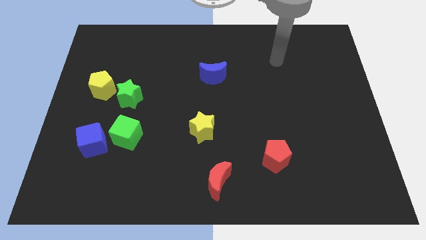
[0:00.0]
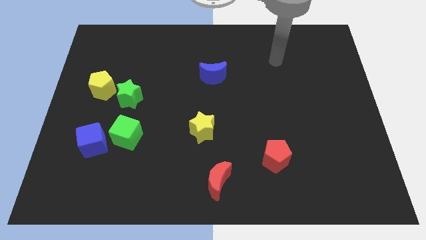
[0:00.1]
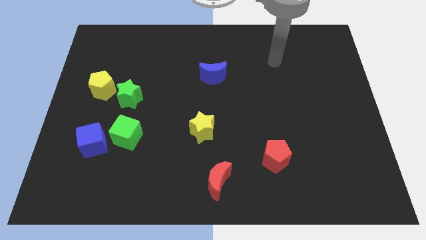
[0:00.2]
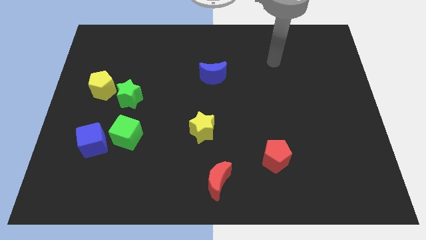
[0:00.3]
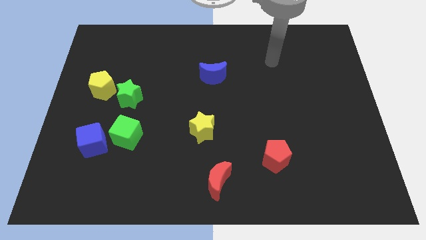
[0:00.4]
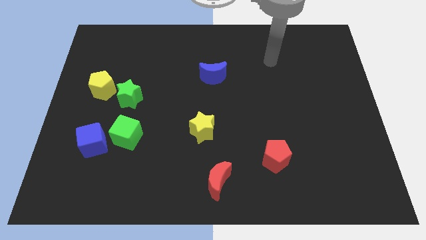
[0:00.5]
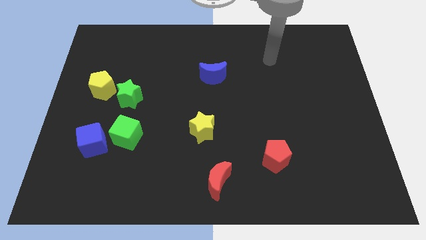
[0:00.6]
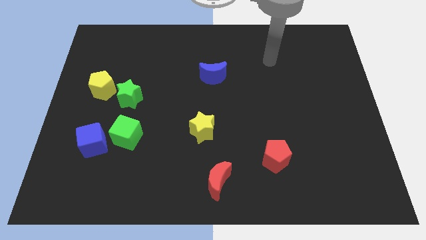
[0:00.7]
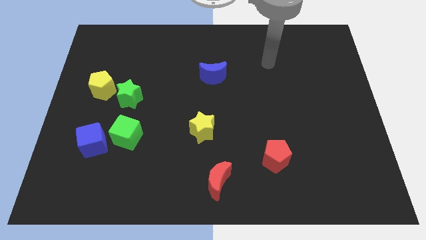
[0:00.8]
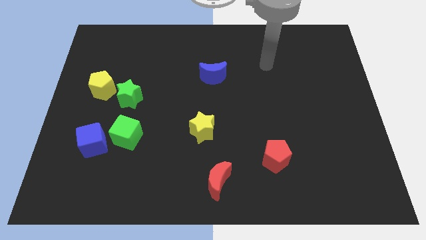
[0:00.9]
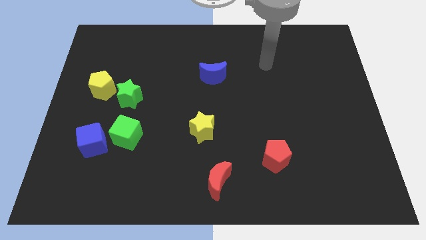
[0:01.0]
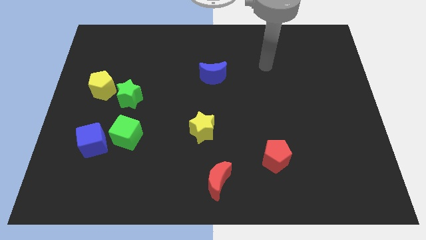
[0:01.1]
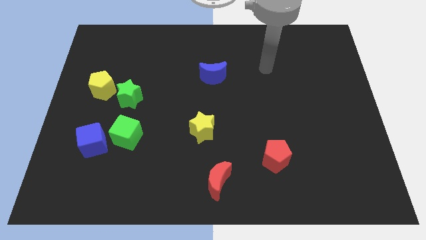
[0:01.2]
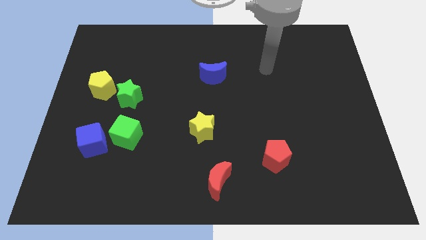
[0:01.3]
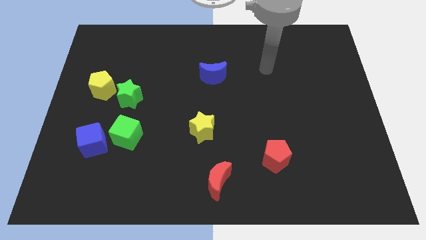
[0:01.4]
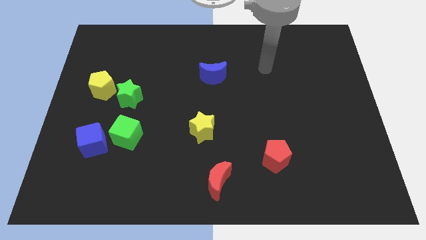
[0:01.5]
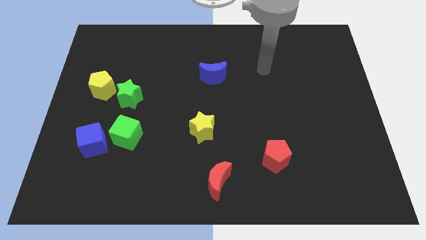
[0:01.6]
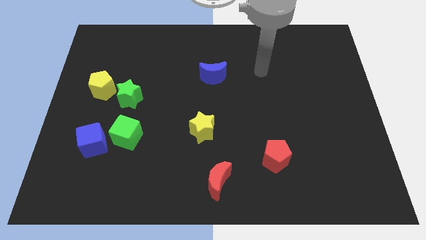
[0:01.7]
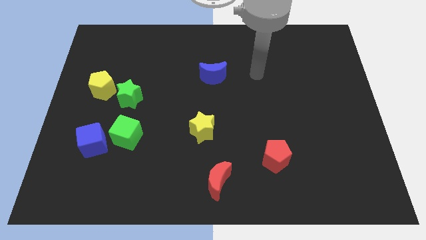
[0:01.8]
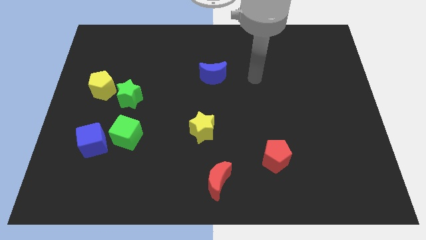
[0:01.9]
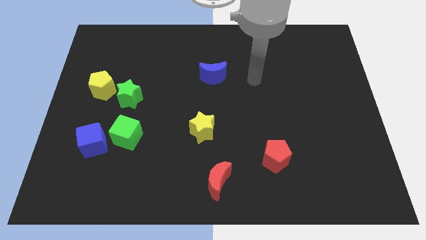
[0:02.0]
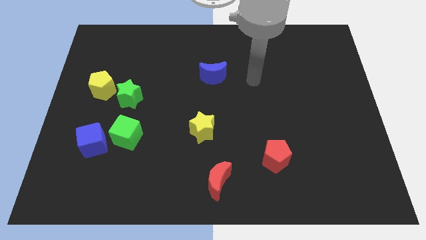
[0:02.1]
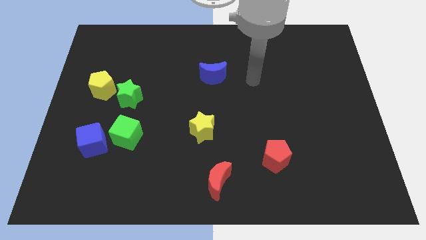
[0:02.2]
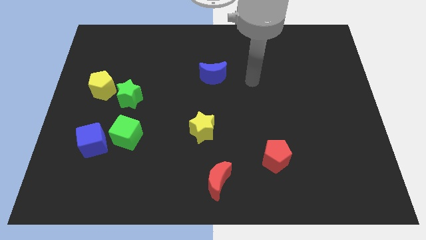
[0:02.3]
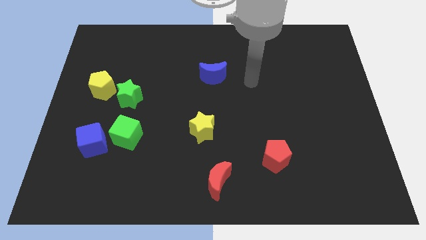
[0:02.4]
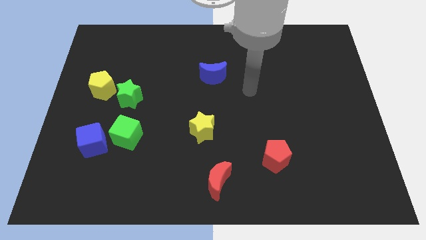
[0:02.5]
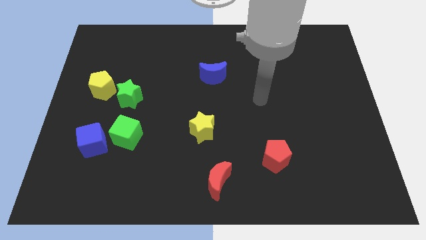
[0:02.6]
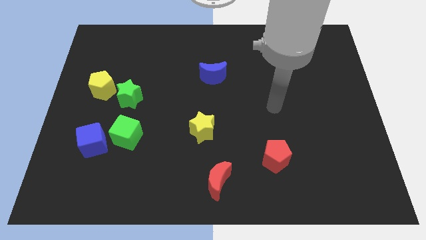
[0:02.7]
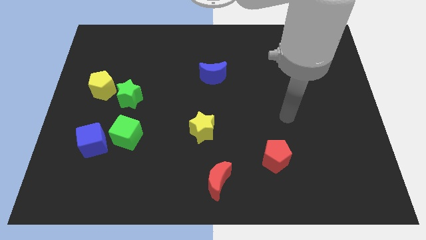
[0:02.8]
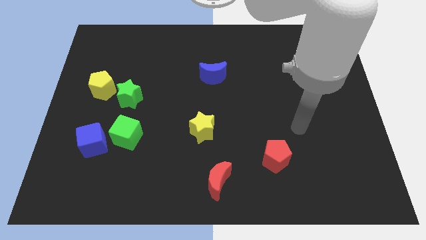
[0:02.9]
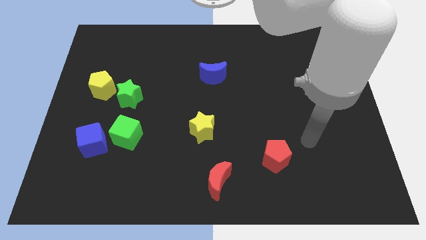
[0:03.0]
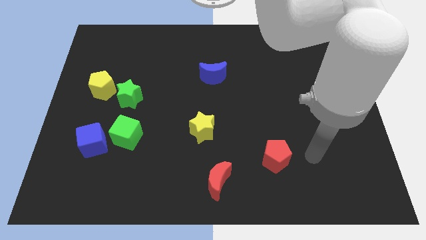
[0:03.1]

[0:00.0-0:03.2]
move the arm towards the red pentagon

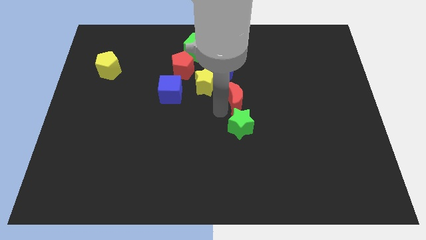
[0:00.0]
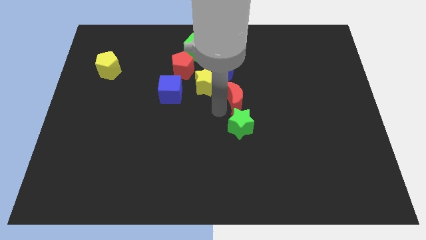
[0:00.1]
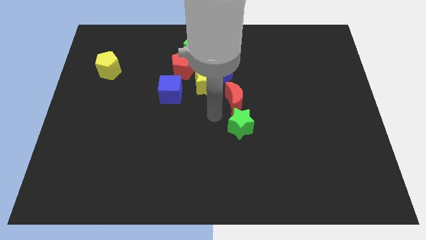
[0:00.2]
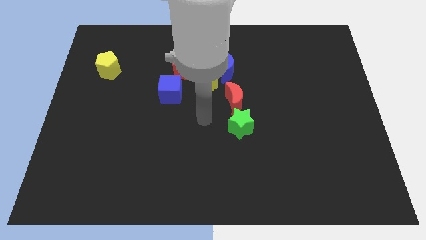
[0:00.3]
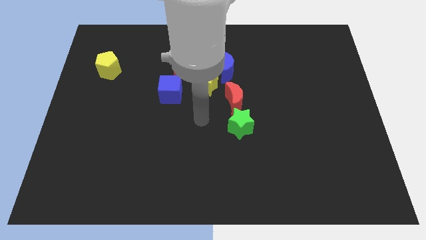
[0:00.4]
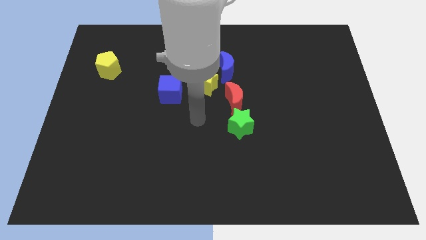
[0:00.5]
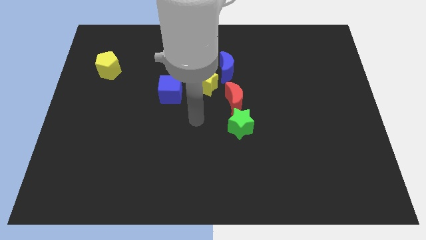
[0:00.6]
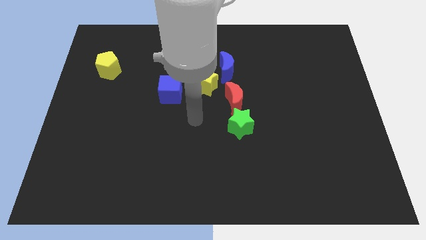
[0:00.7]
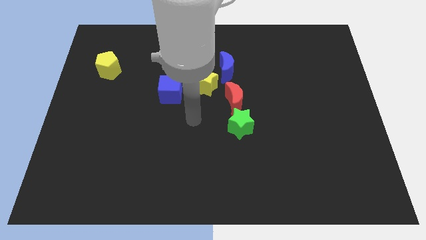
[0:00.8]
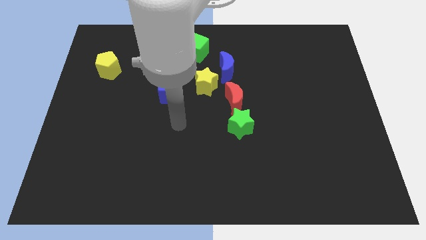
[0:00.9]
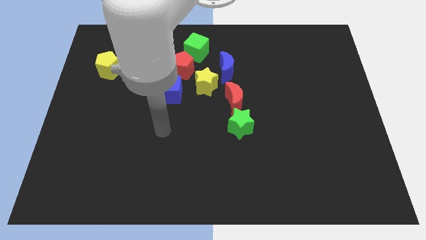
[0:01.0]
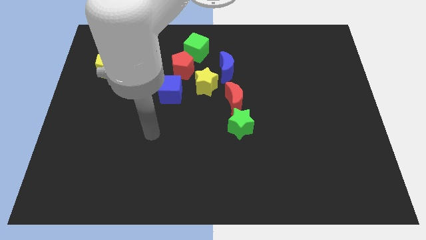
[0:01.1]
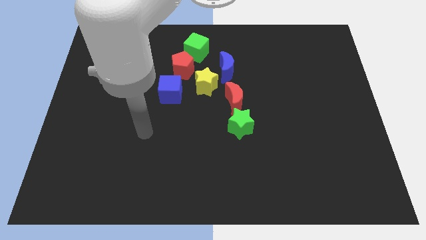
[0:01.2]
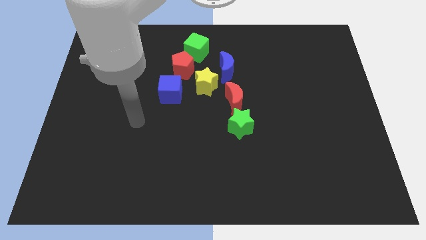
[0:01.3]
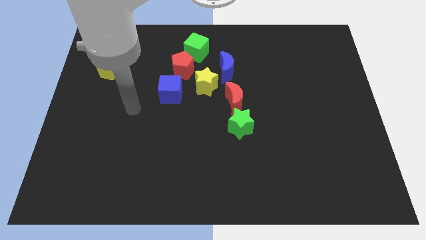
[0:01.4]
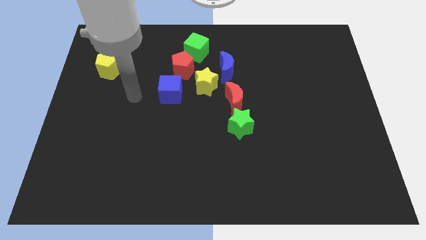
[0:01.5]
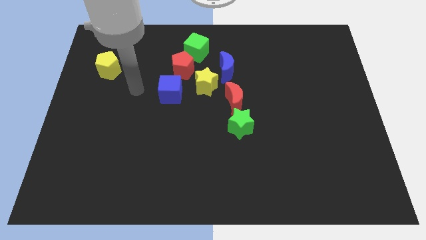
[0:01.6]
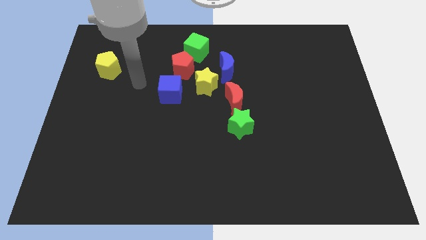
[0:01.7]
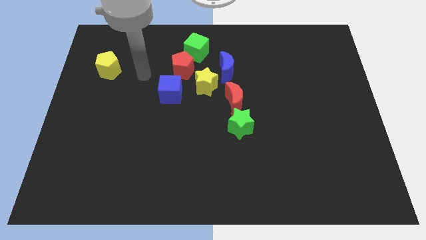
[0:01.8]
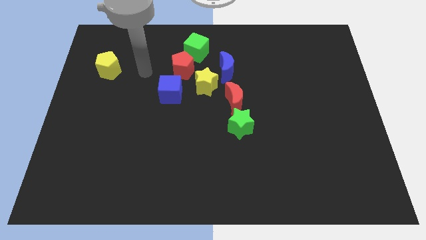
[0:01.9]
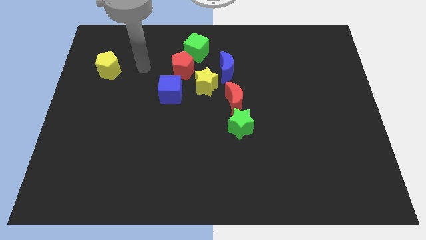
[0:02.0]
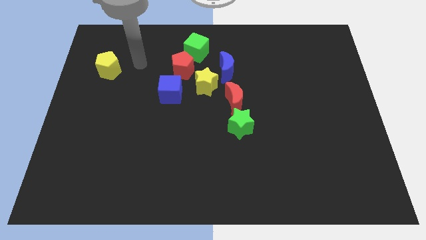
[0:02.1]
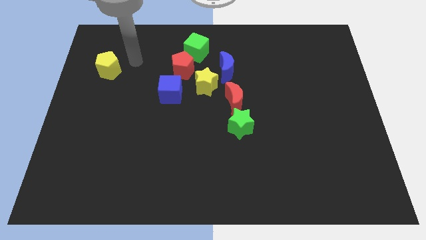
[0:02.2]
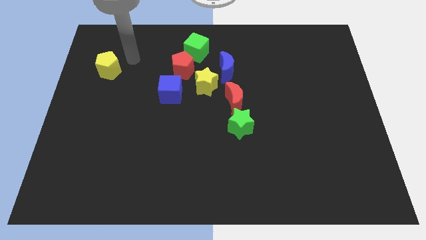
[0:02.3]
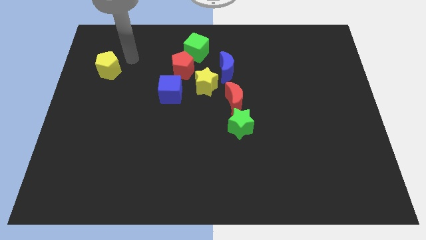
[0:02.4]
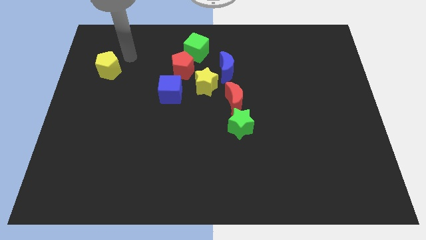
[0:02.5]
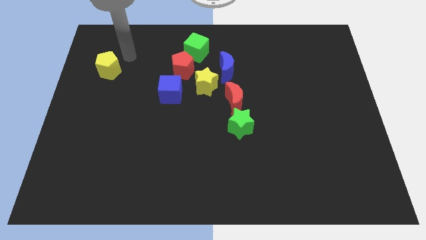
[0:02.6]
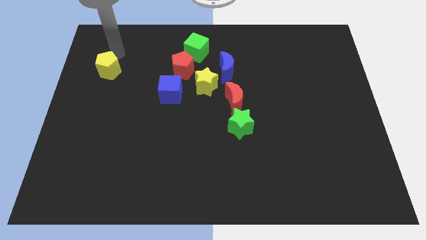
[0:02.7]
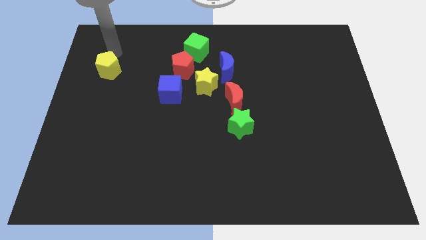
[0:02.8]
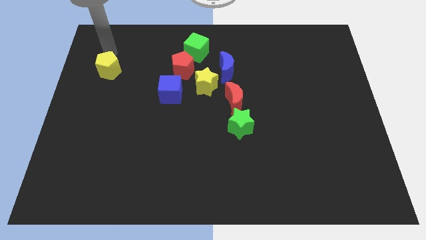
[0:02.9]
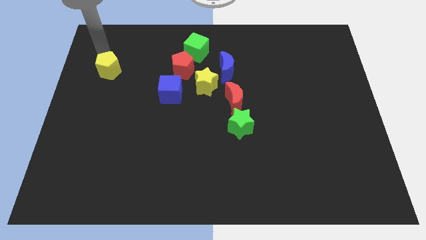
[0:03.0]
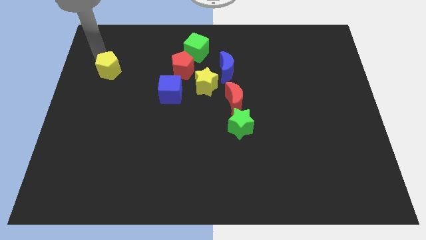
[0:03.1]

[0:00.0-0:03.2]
move your arm towards the yellow pentagon

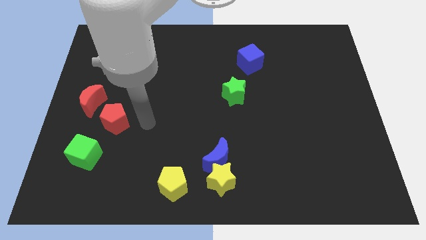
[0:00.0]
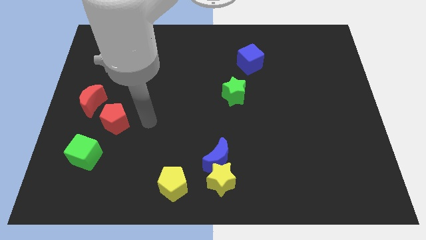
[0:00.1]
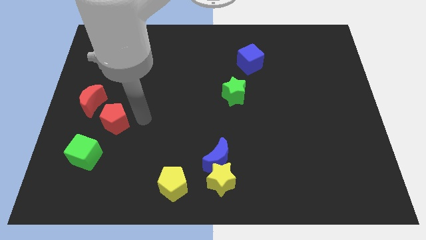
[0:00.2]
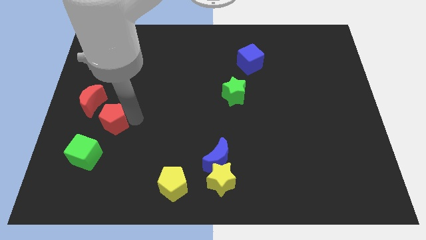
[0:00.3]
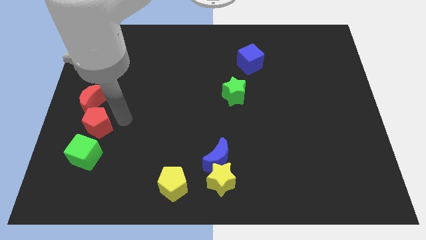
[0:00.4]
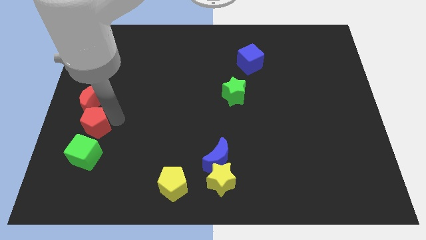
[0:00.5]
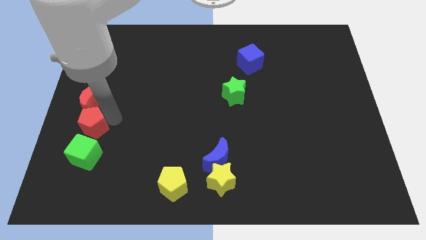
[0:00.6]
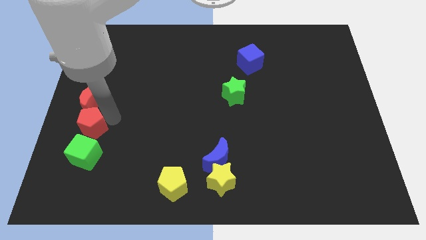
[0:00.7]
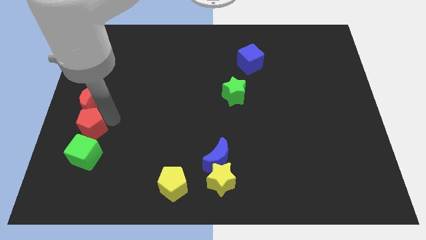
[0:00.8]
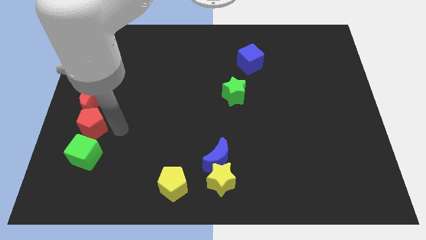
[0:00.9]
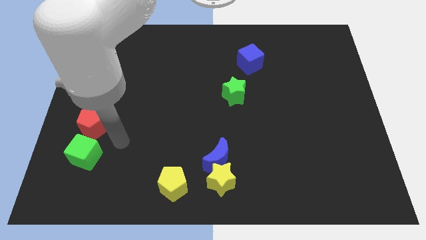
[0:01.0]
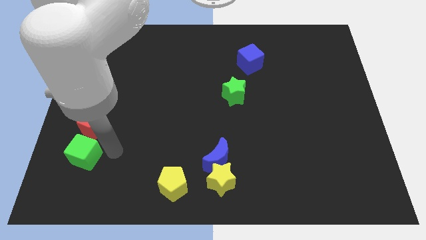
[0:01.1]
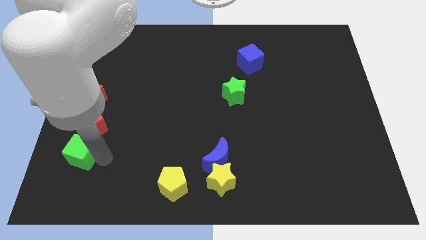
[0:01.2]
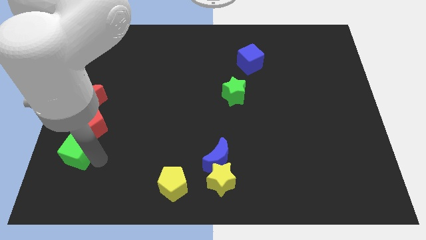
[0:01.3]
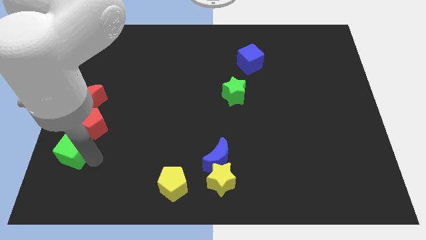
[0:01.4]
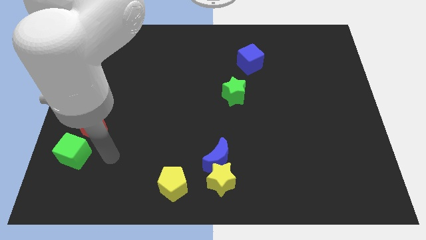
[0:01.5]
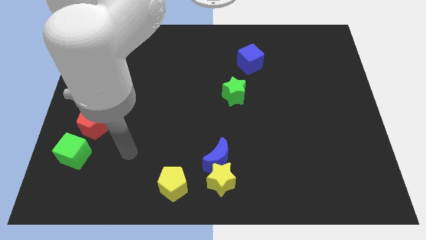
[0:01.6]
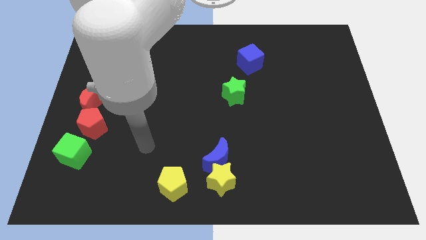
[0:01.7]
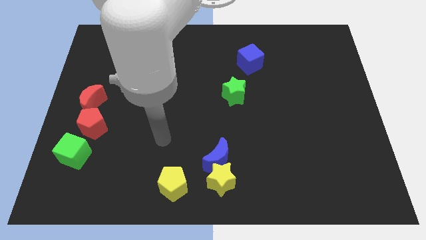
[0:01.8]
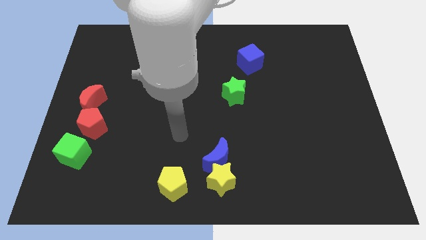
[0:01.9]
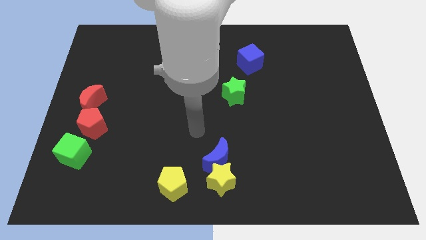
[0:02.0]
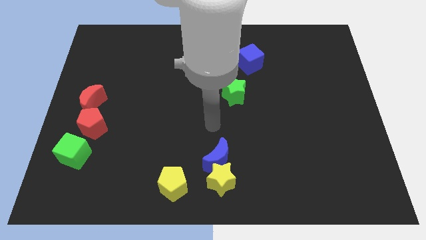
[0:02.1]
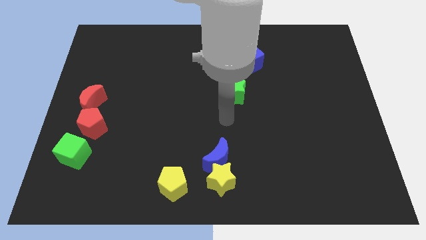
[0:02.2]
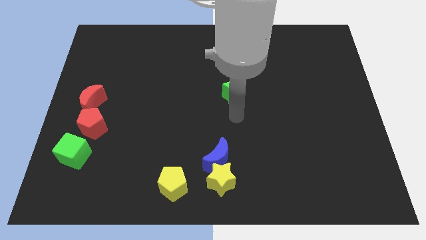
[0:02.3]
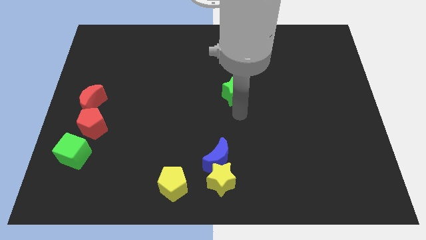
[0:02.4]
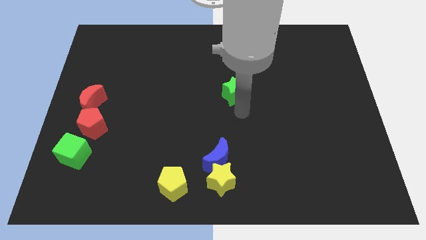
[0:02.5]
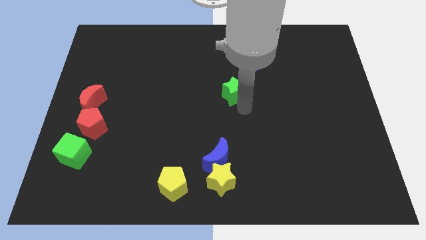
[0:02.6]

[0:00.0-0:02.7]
place your arm below green star
